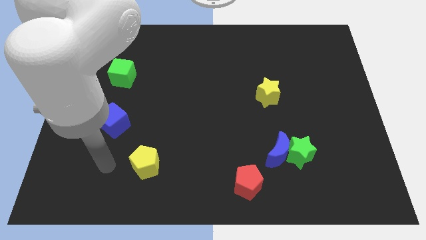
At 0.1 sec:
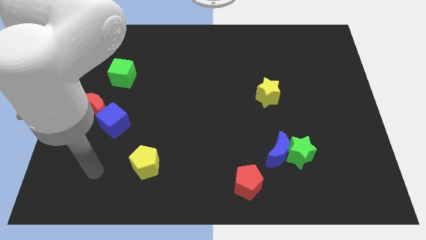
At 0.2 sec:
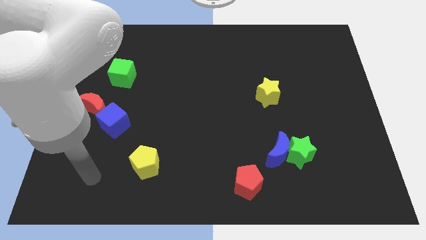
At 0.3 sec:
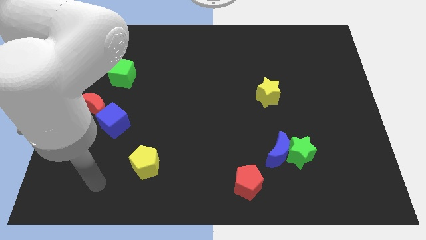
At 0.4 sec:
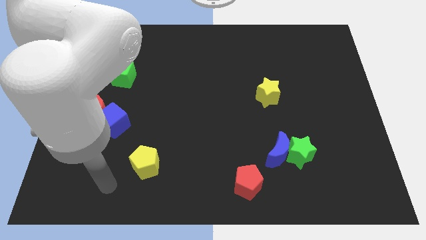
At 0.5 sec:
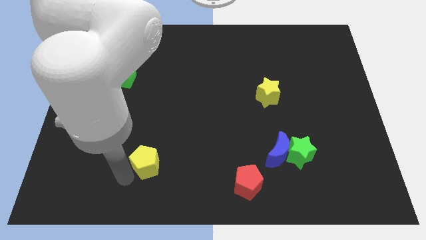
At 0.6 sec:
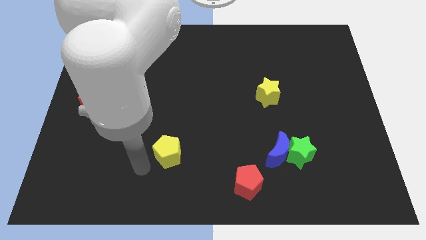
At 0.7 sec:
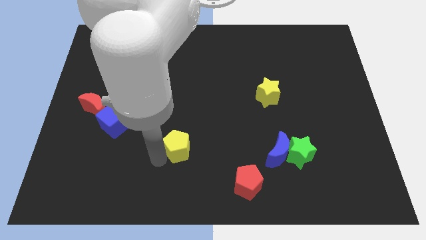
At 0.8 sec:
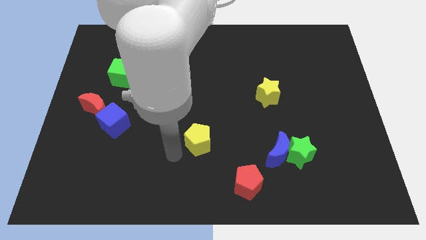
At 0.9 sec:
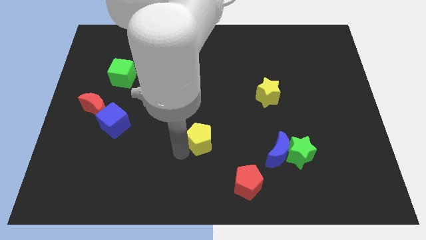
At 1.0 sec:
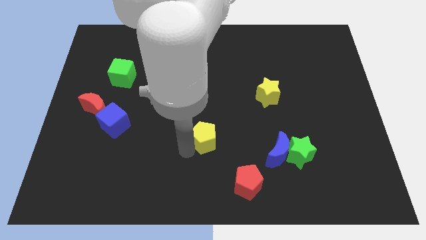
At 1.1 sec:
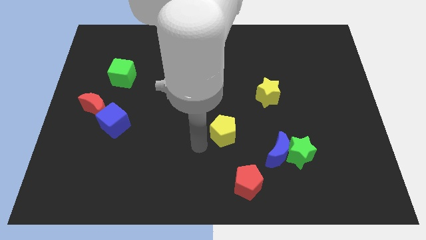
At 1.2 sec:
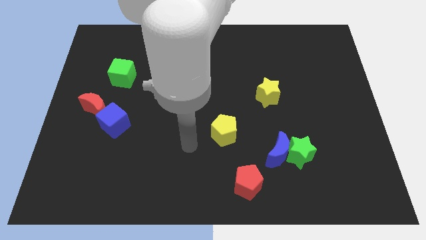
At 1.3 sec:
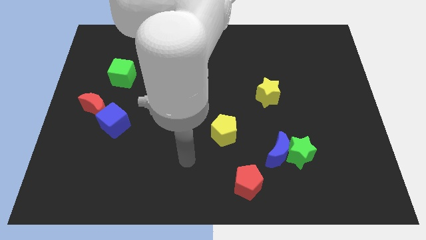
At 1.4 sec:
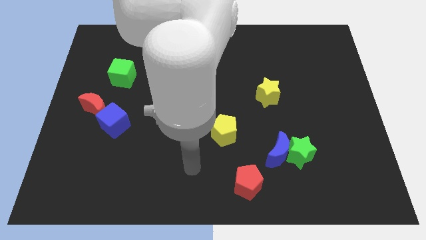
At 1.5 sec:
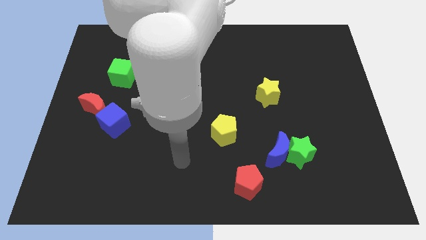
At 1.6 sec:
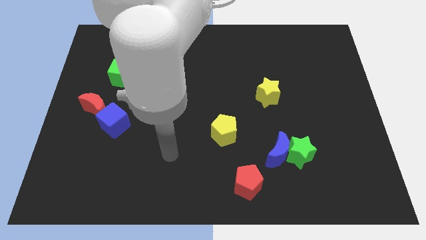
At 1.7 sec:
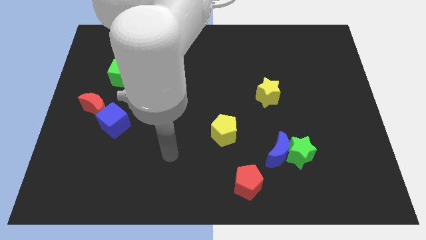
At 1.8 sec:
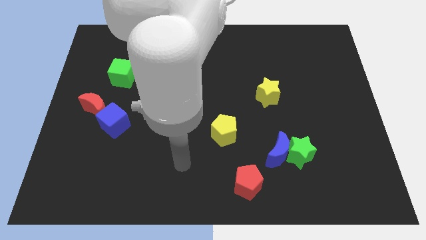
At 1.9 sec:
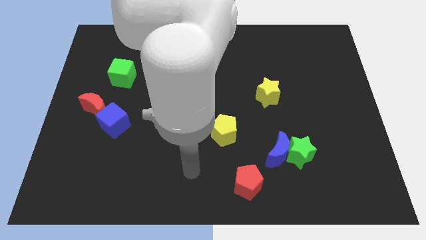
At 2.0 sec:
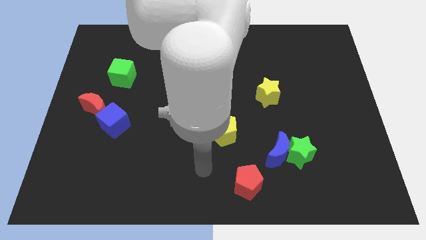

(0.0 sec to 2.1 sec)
push yellow pentagon towards yellow star

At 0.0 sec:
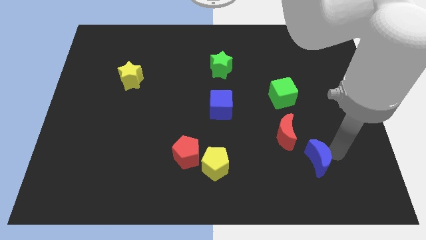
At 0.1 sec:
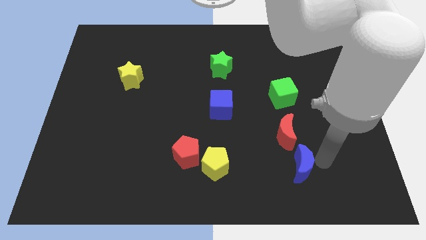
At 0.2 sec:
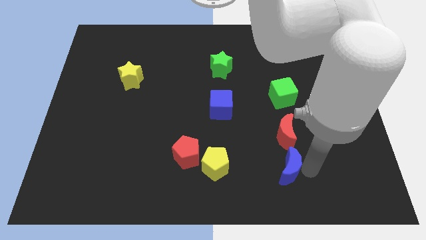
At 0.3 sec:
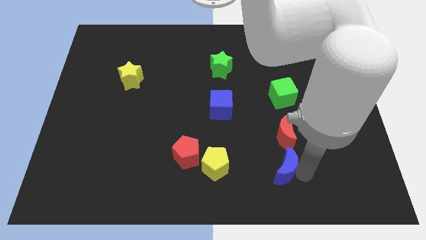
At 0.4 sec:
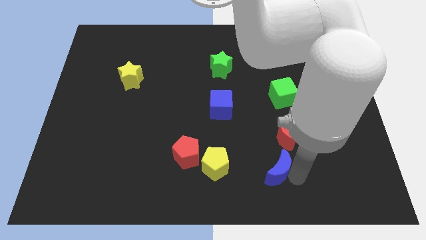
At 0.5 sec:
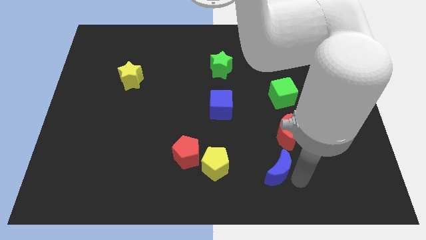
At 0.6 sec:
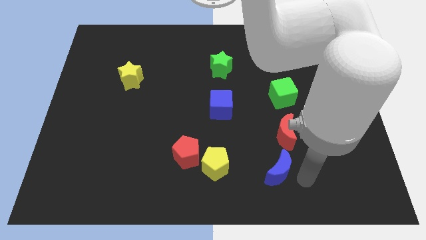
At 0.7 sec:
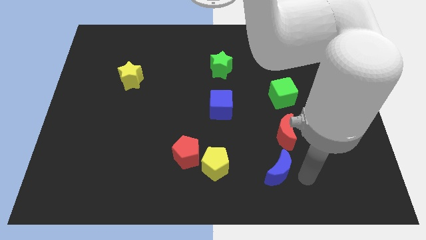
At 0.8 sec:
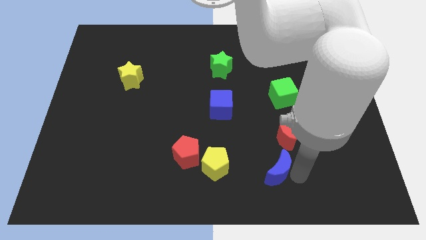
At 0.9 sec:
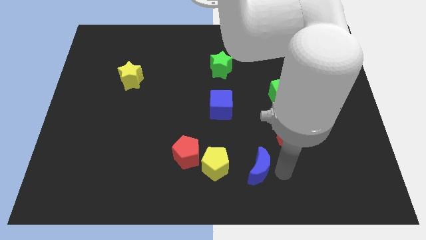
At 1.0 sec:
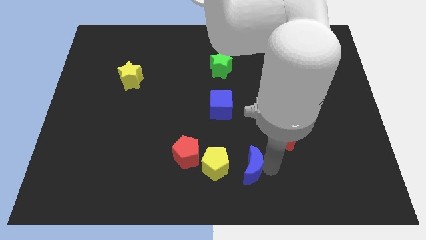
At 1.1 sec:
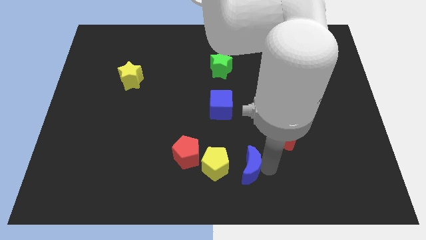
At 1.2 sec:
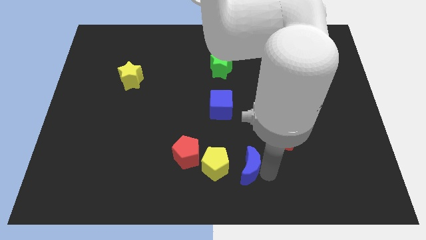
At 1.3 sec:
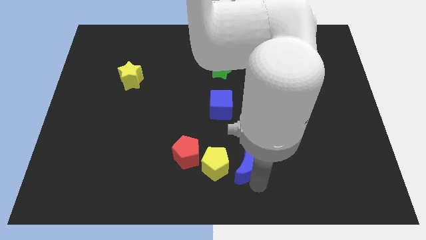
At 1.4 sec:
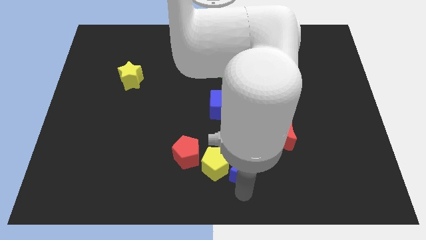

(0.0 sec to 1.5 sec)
push the blue moon to the right of yellow pentagon

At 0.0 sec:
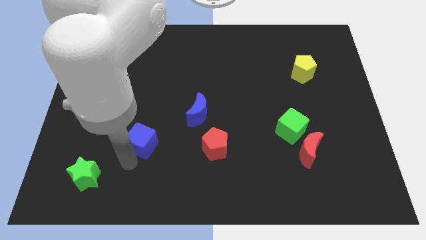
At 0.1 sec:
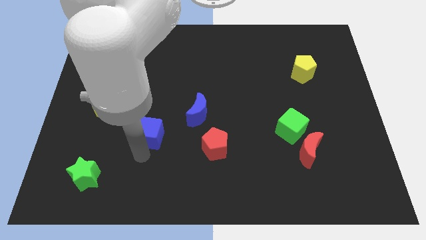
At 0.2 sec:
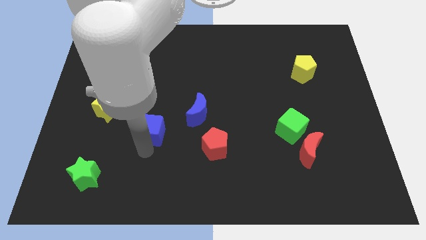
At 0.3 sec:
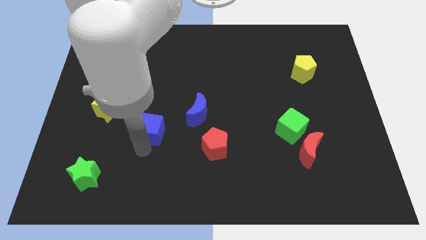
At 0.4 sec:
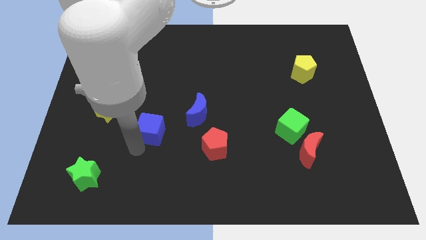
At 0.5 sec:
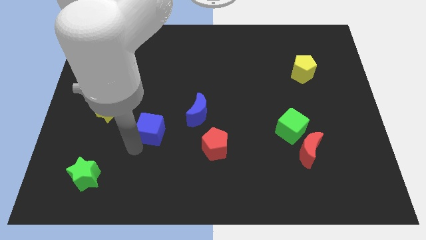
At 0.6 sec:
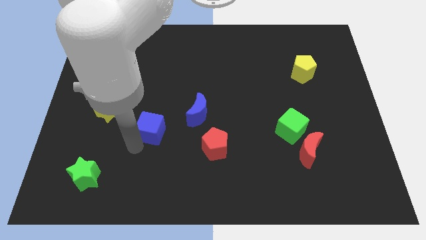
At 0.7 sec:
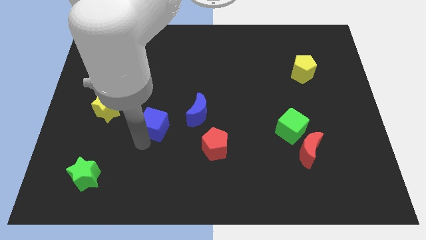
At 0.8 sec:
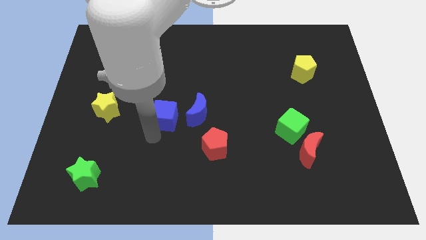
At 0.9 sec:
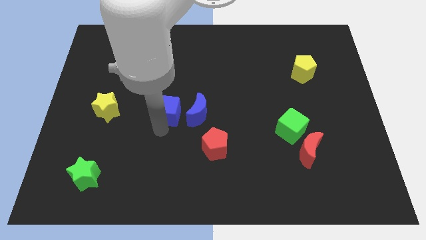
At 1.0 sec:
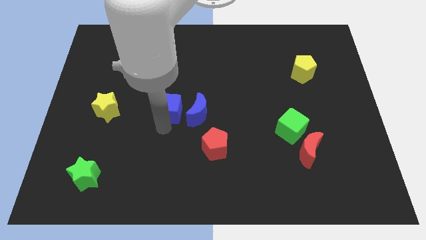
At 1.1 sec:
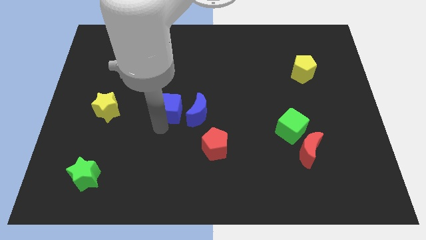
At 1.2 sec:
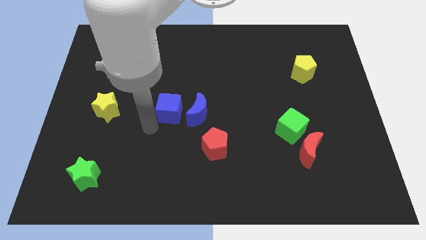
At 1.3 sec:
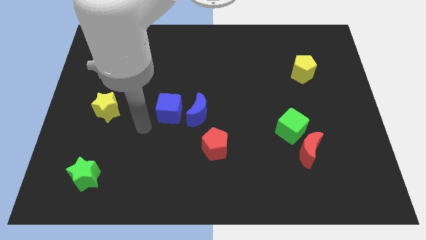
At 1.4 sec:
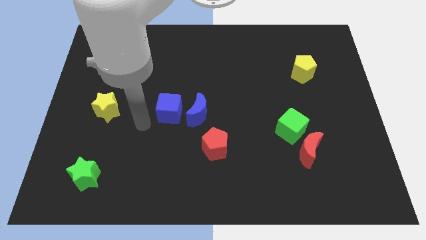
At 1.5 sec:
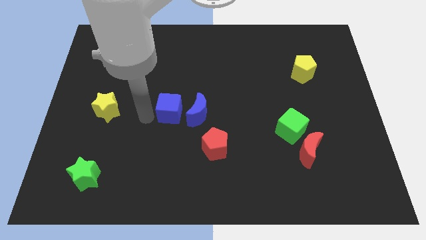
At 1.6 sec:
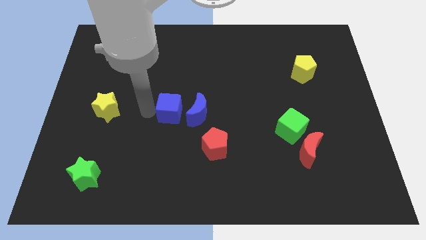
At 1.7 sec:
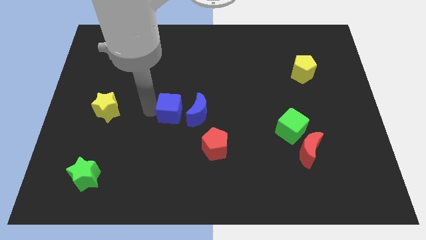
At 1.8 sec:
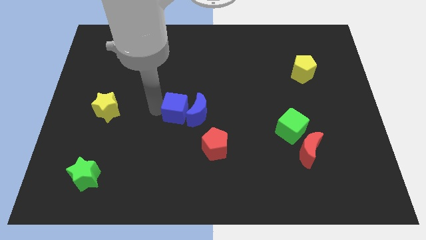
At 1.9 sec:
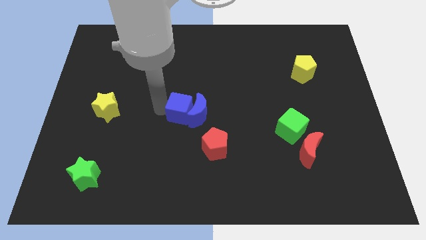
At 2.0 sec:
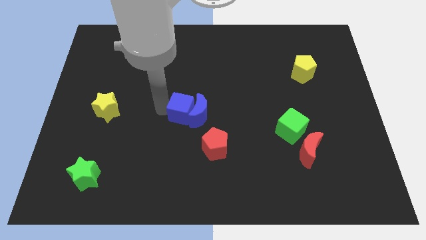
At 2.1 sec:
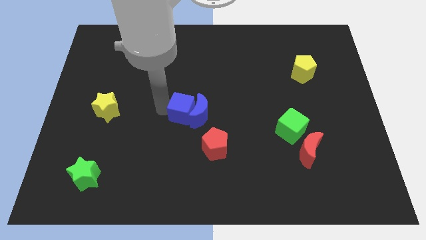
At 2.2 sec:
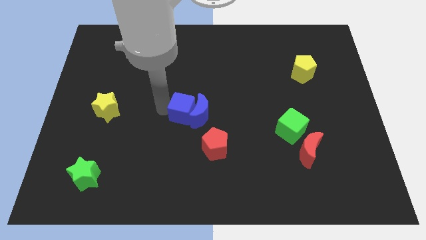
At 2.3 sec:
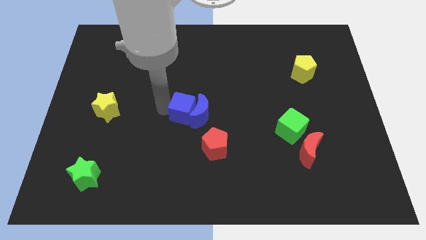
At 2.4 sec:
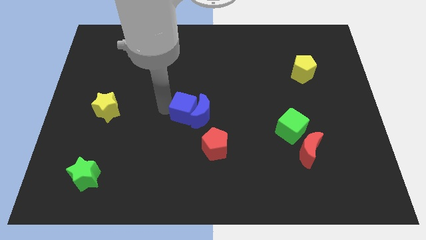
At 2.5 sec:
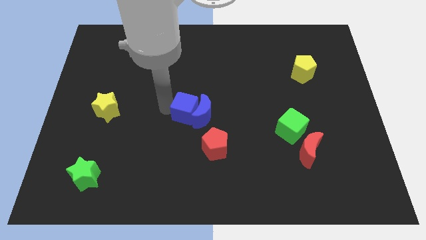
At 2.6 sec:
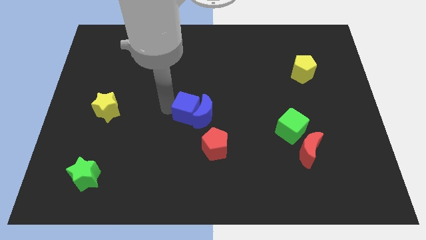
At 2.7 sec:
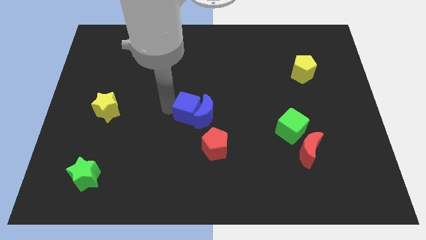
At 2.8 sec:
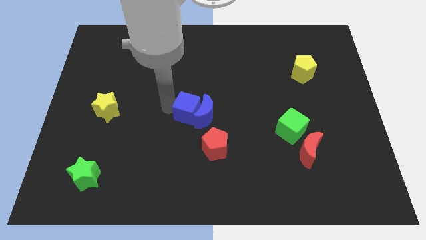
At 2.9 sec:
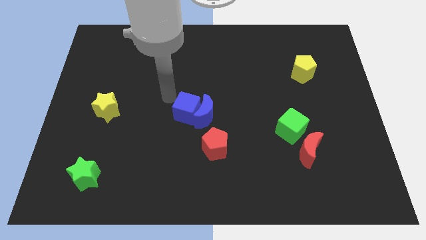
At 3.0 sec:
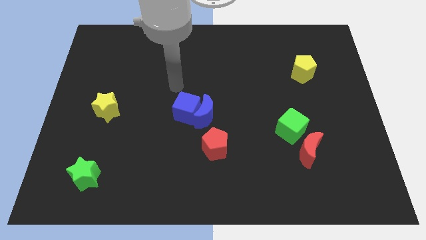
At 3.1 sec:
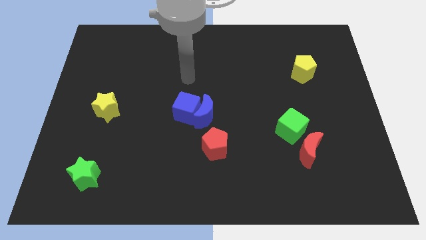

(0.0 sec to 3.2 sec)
move the blue cube left beside the blue moon

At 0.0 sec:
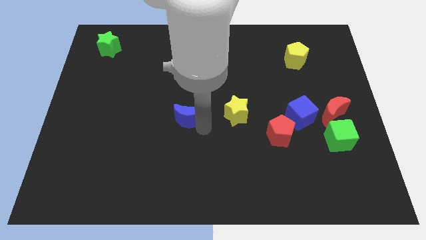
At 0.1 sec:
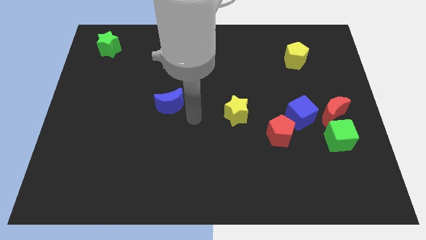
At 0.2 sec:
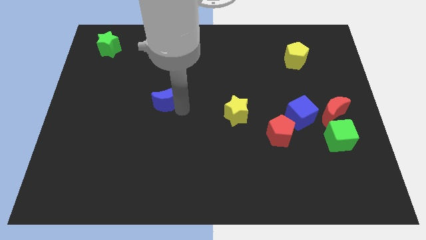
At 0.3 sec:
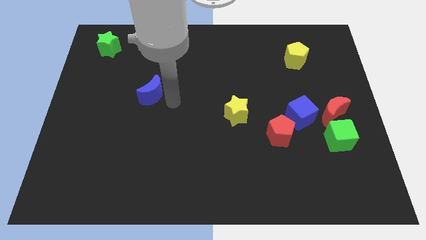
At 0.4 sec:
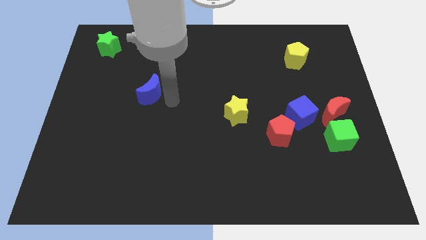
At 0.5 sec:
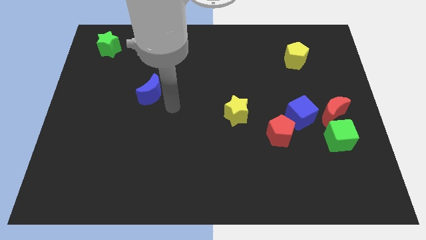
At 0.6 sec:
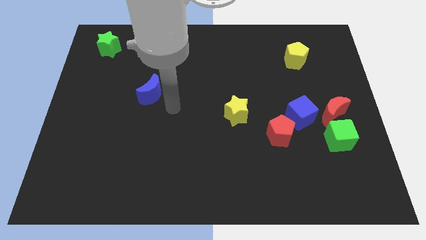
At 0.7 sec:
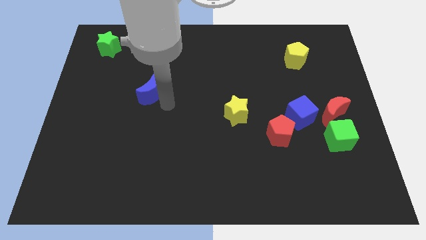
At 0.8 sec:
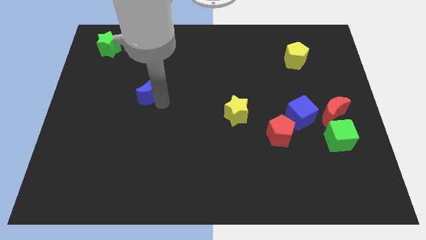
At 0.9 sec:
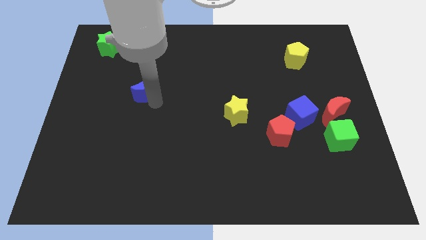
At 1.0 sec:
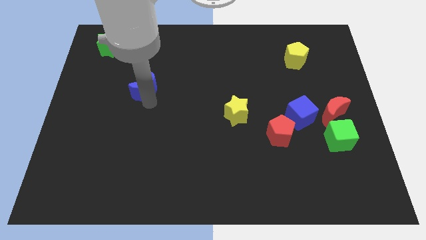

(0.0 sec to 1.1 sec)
push blue moon towards the green star

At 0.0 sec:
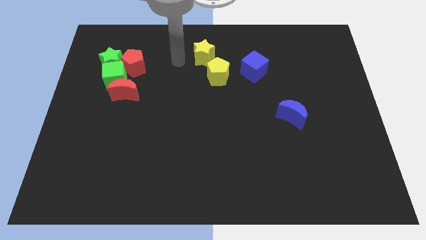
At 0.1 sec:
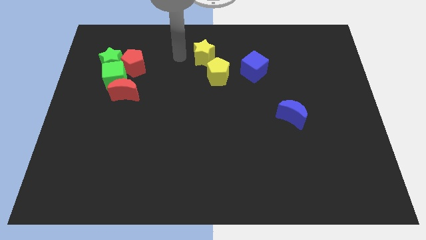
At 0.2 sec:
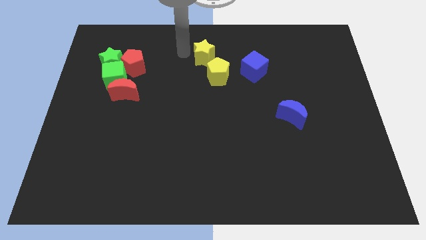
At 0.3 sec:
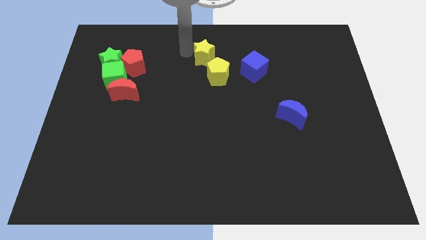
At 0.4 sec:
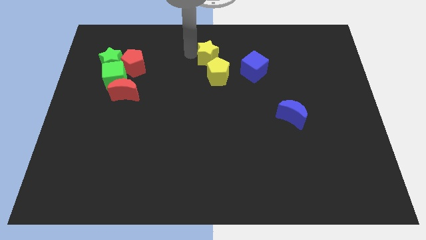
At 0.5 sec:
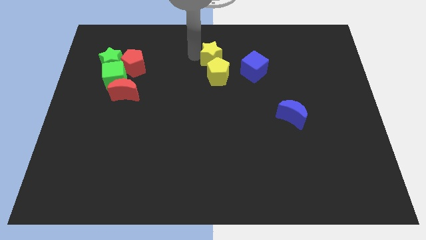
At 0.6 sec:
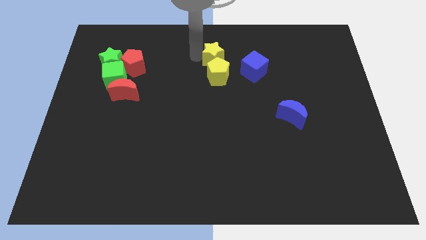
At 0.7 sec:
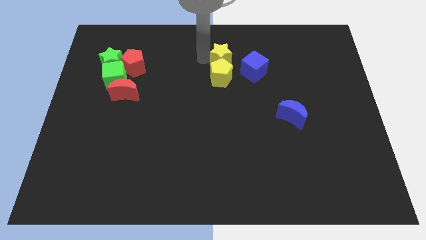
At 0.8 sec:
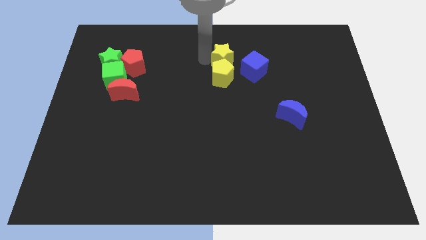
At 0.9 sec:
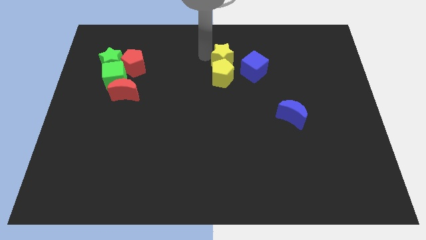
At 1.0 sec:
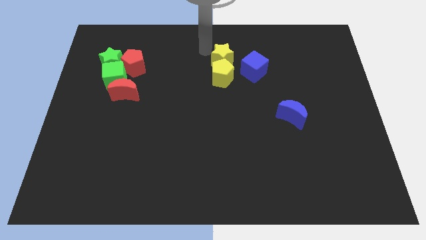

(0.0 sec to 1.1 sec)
place yellow star on top of yellow pentagon
